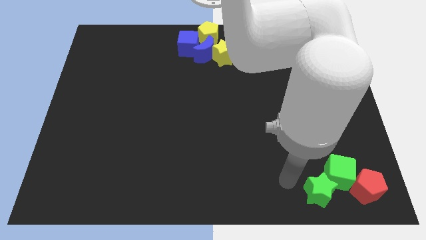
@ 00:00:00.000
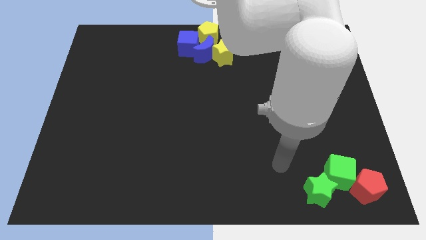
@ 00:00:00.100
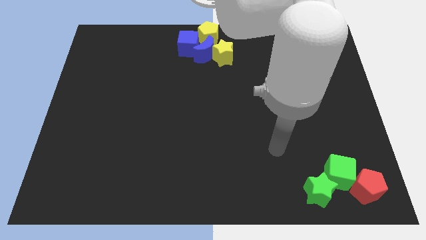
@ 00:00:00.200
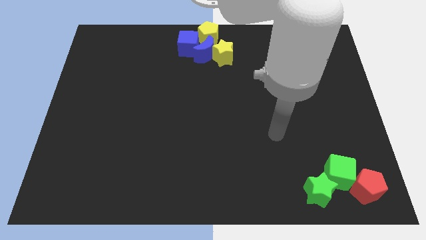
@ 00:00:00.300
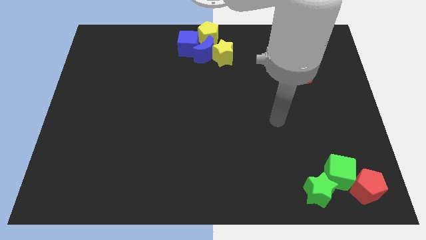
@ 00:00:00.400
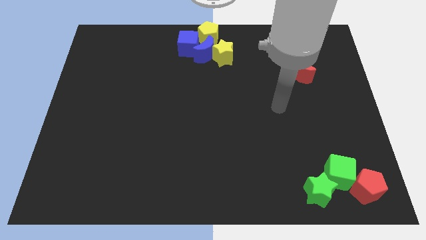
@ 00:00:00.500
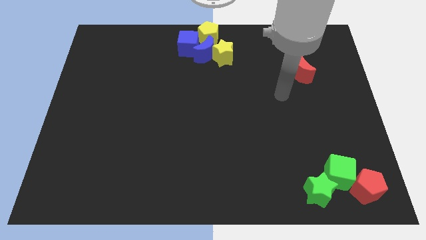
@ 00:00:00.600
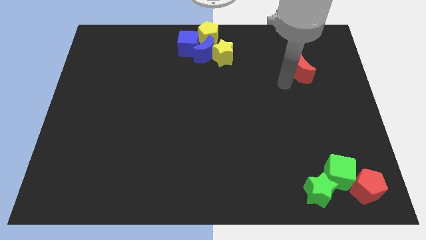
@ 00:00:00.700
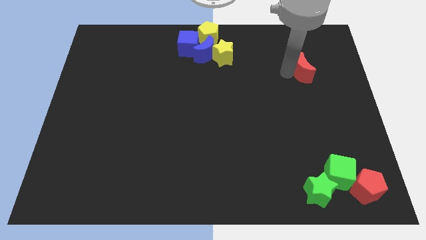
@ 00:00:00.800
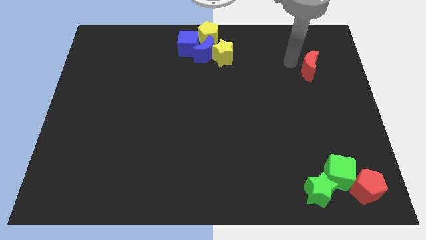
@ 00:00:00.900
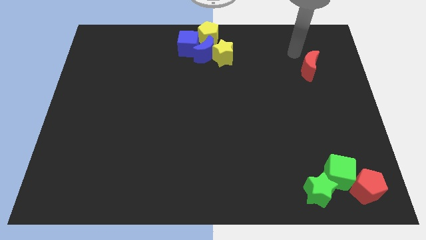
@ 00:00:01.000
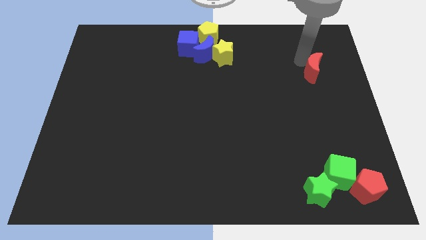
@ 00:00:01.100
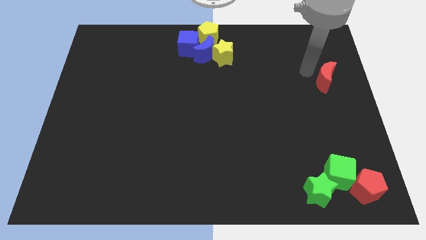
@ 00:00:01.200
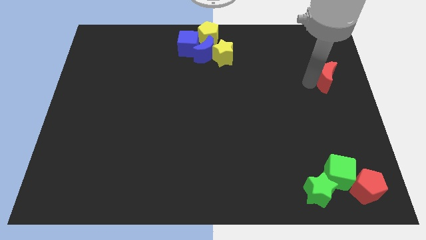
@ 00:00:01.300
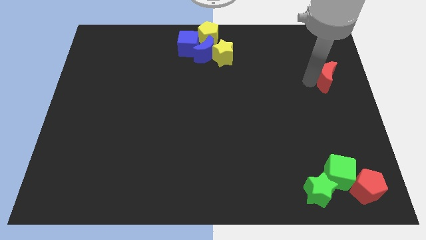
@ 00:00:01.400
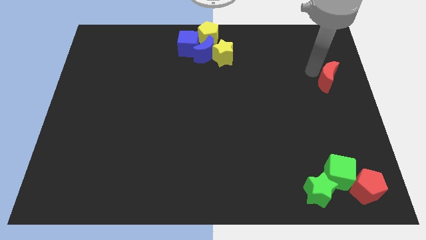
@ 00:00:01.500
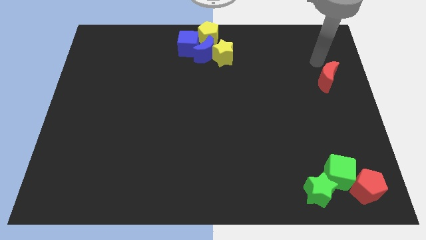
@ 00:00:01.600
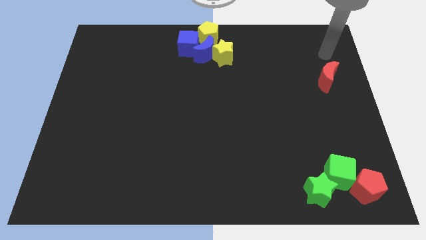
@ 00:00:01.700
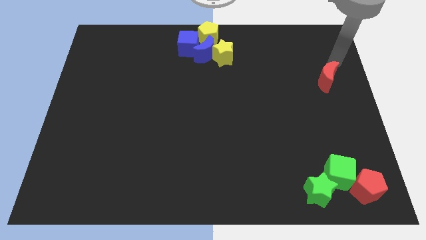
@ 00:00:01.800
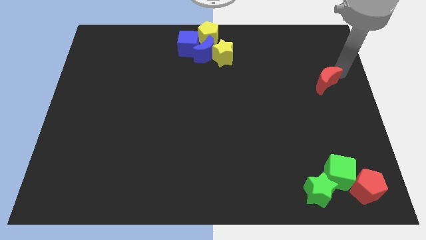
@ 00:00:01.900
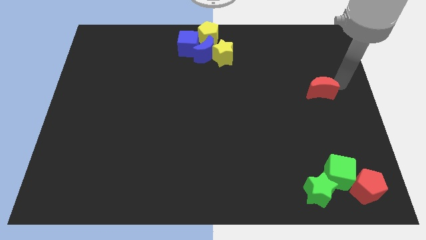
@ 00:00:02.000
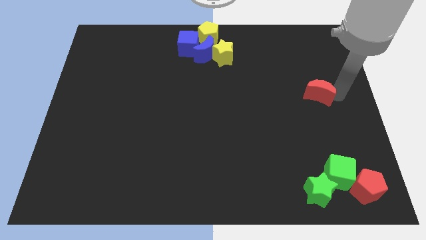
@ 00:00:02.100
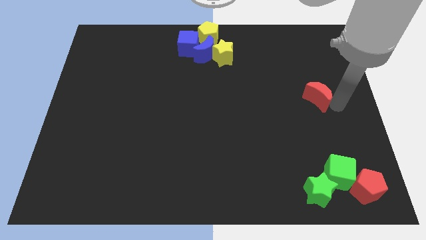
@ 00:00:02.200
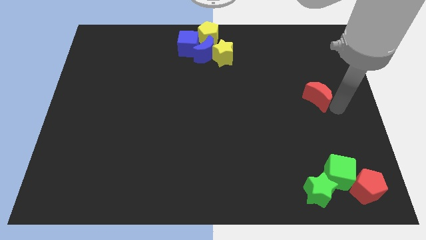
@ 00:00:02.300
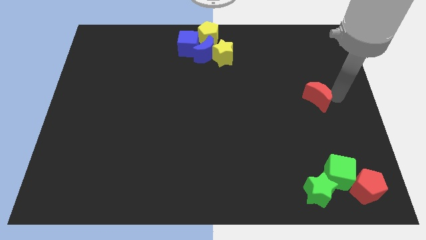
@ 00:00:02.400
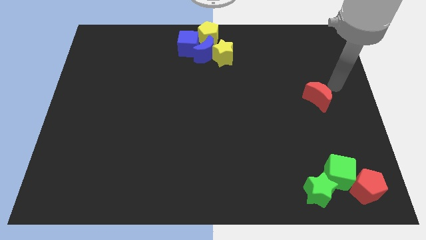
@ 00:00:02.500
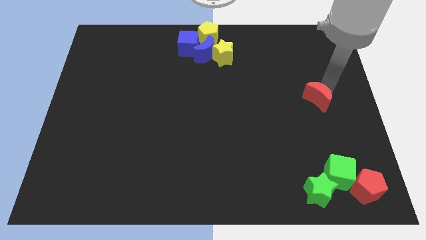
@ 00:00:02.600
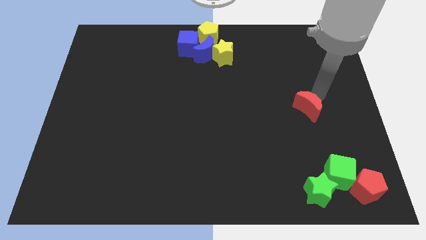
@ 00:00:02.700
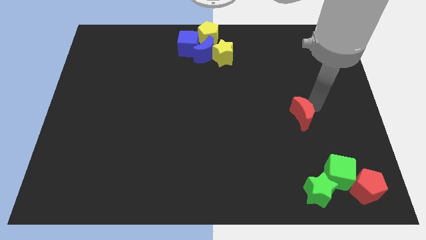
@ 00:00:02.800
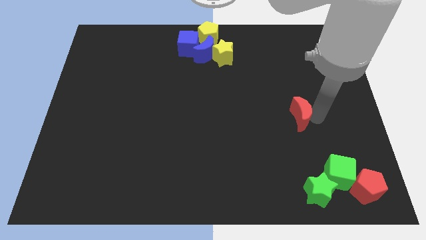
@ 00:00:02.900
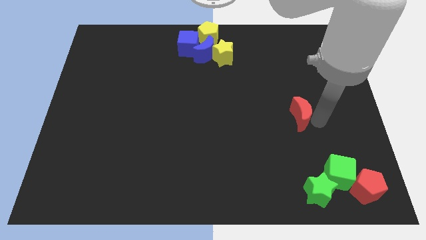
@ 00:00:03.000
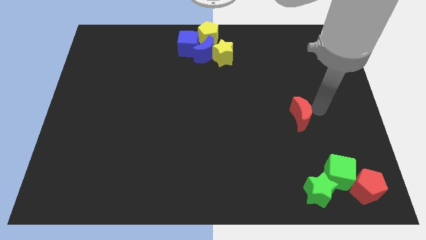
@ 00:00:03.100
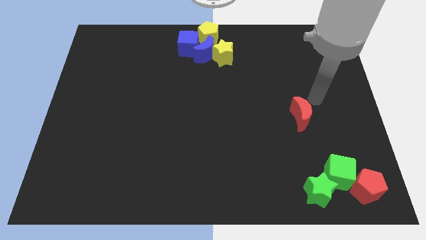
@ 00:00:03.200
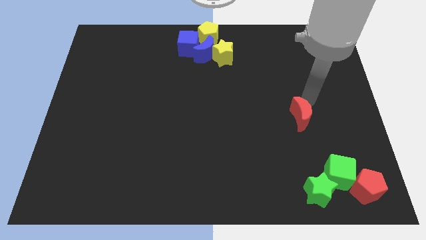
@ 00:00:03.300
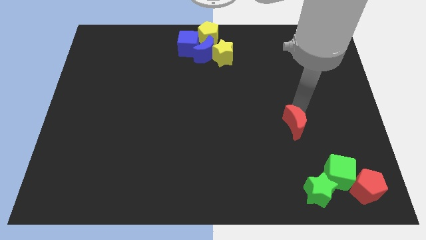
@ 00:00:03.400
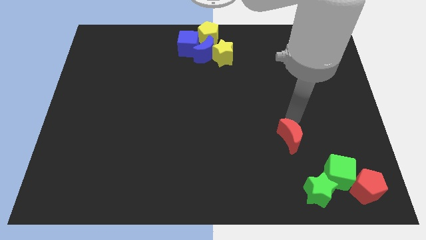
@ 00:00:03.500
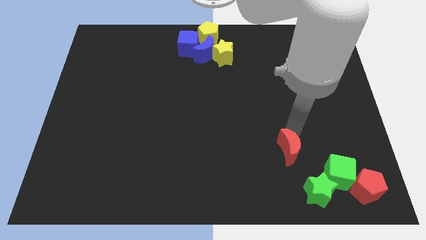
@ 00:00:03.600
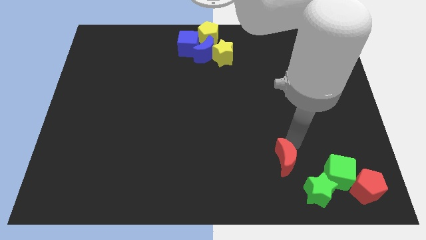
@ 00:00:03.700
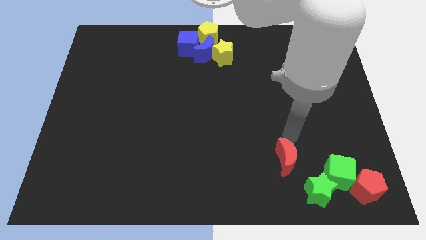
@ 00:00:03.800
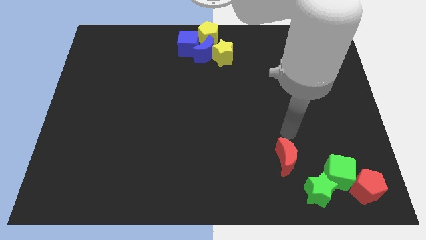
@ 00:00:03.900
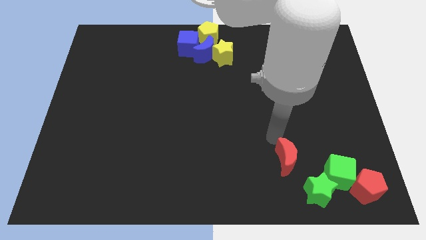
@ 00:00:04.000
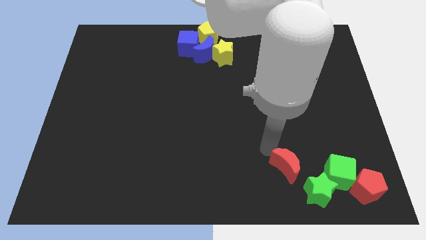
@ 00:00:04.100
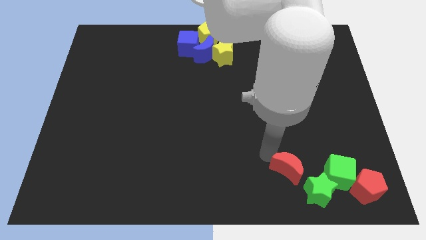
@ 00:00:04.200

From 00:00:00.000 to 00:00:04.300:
place the red crescent horizontally to the left side of the green cube

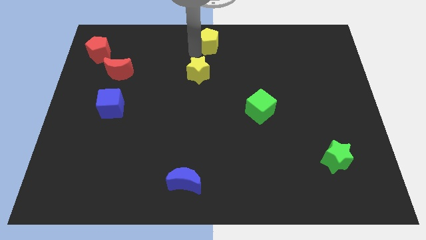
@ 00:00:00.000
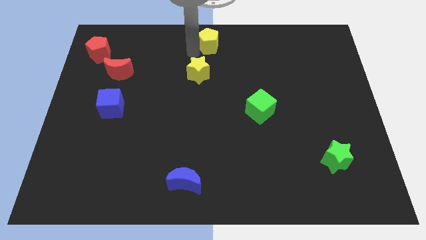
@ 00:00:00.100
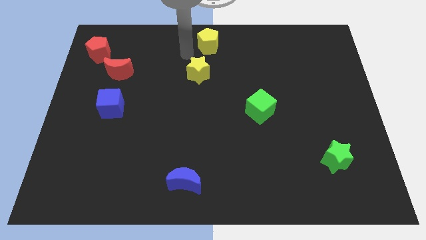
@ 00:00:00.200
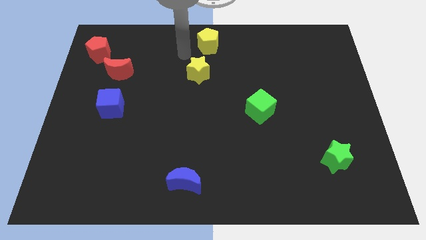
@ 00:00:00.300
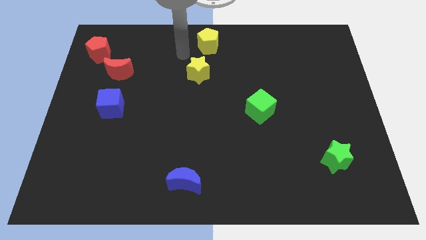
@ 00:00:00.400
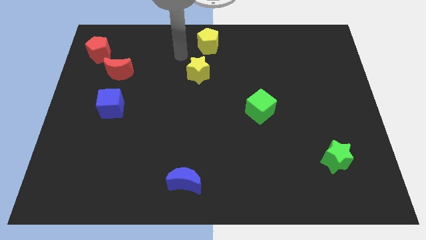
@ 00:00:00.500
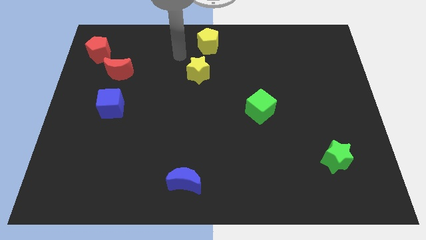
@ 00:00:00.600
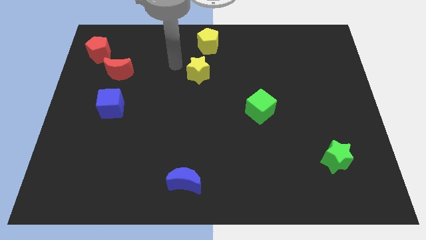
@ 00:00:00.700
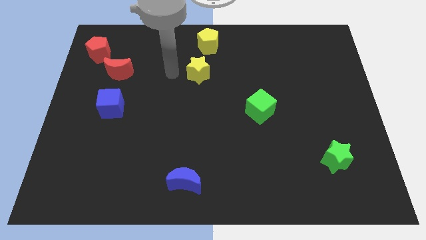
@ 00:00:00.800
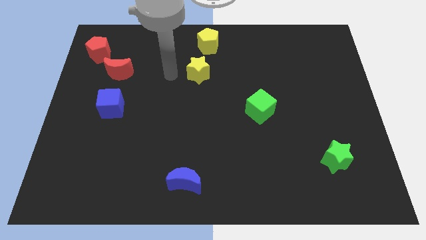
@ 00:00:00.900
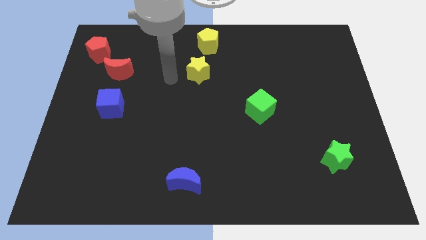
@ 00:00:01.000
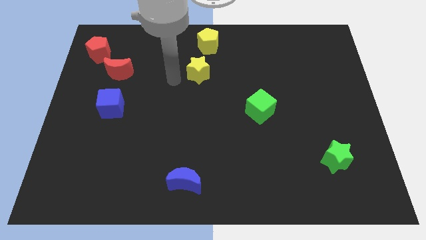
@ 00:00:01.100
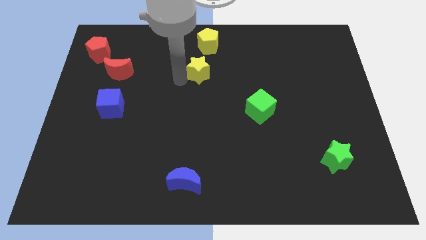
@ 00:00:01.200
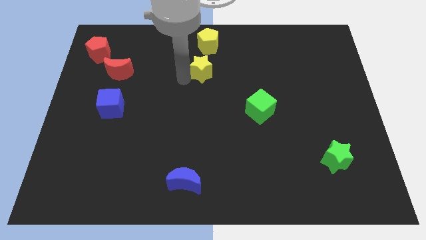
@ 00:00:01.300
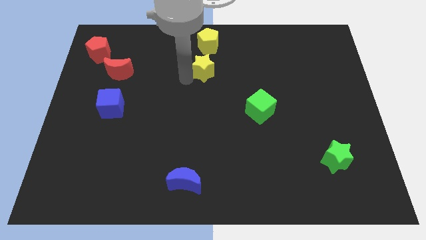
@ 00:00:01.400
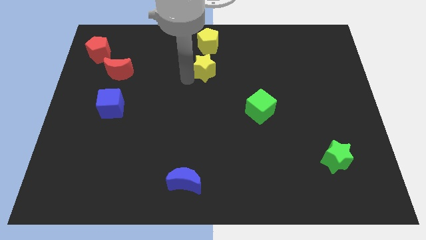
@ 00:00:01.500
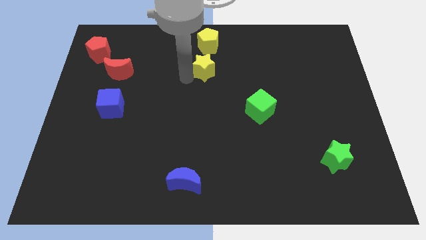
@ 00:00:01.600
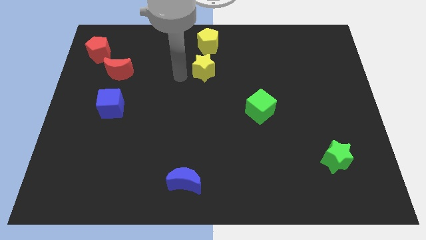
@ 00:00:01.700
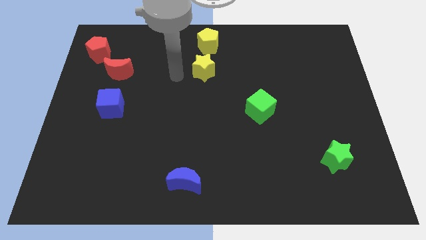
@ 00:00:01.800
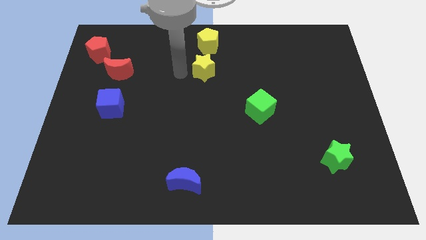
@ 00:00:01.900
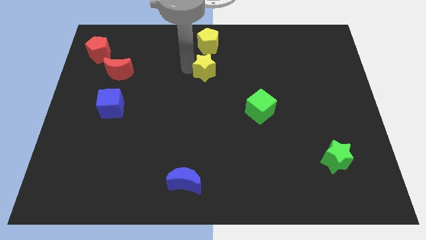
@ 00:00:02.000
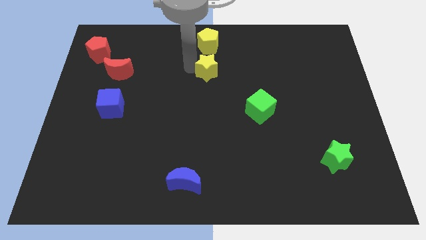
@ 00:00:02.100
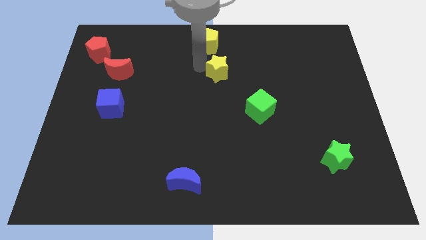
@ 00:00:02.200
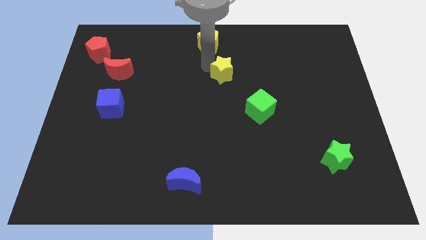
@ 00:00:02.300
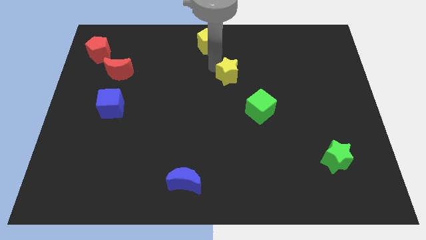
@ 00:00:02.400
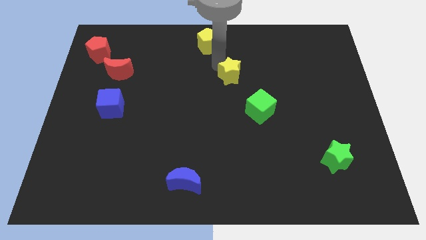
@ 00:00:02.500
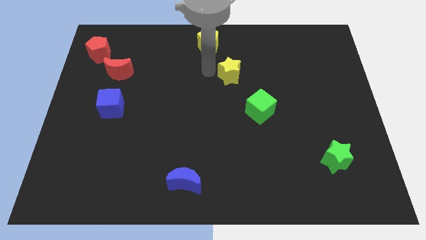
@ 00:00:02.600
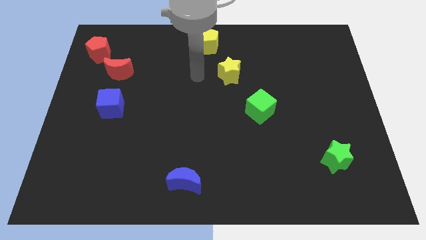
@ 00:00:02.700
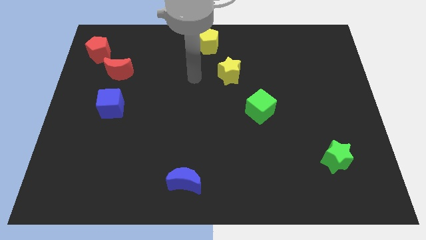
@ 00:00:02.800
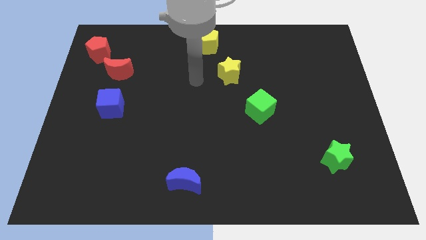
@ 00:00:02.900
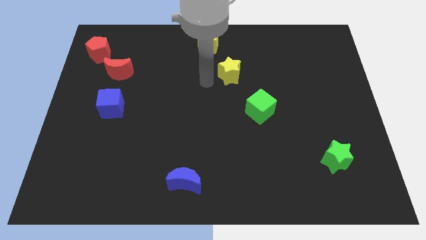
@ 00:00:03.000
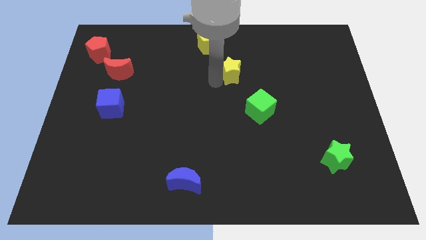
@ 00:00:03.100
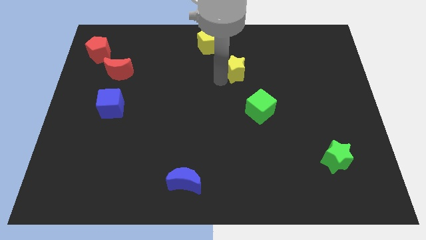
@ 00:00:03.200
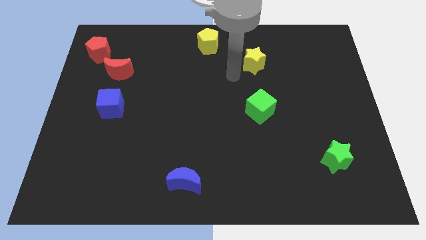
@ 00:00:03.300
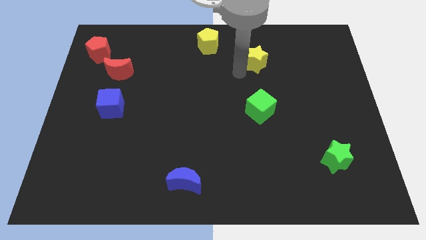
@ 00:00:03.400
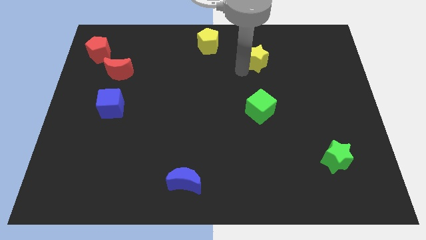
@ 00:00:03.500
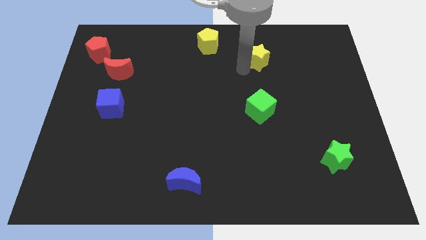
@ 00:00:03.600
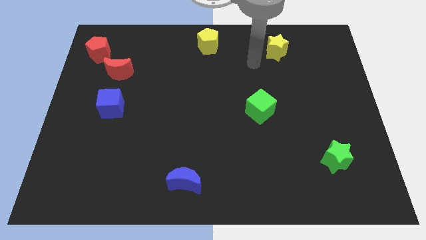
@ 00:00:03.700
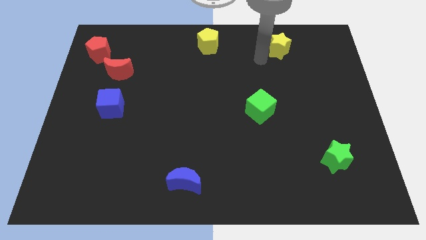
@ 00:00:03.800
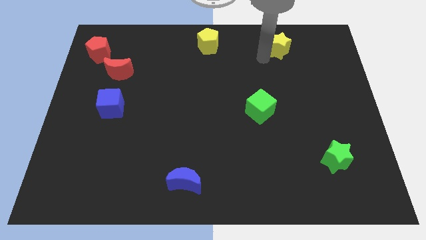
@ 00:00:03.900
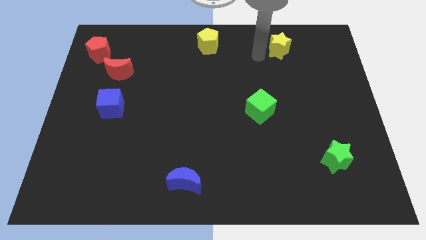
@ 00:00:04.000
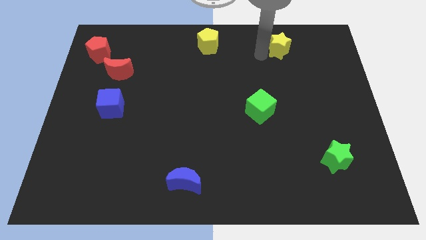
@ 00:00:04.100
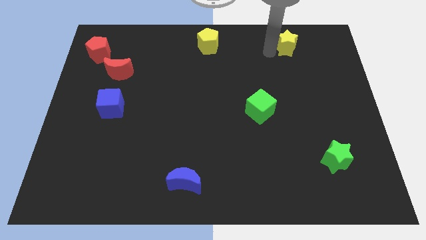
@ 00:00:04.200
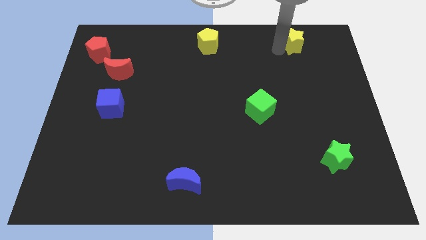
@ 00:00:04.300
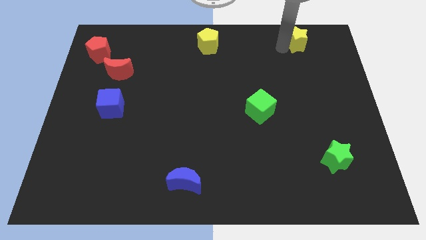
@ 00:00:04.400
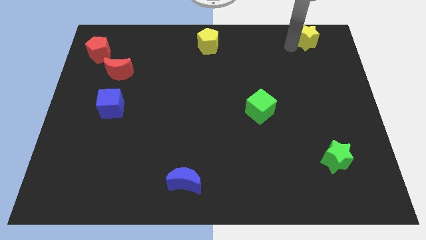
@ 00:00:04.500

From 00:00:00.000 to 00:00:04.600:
push the yellow star to the right
